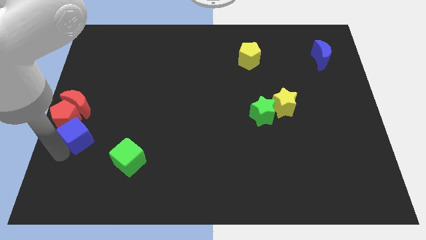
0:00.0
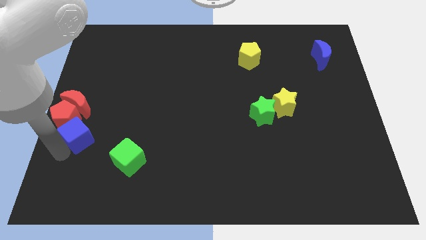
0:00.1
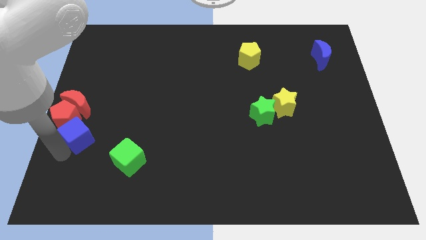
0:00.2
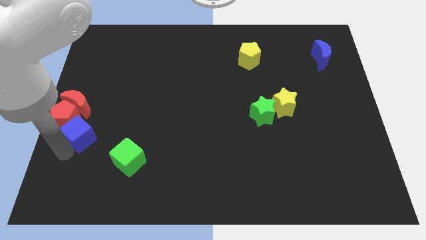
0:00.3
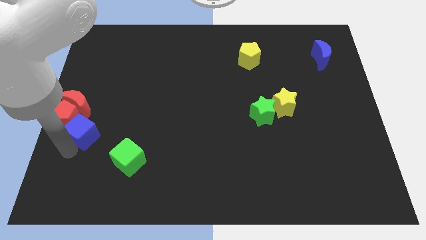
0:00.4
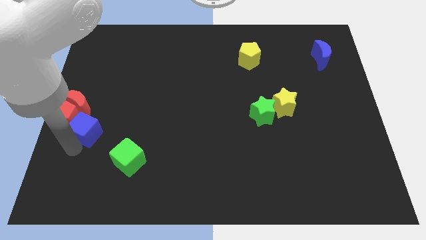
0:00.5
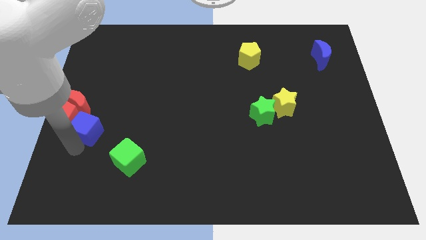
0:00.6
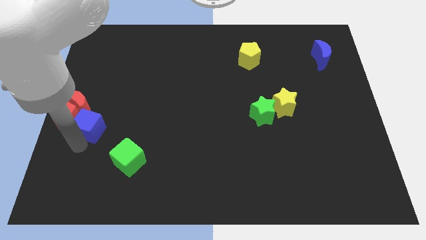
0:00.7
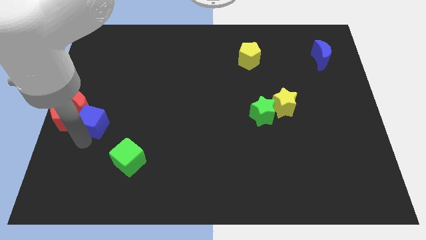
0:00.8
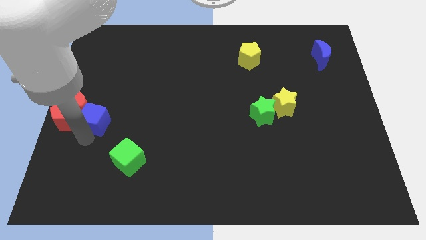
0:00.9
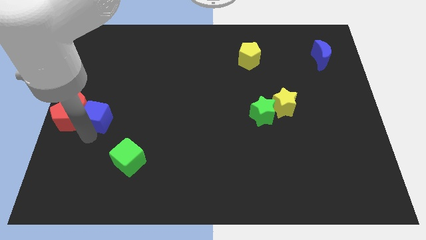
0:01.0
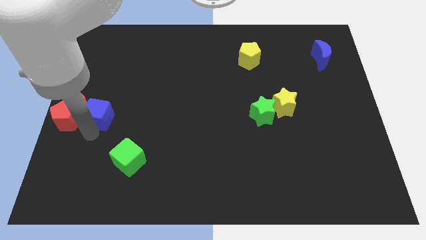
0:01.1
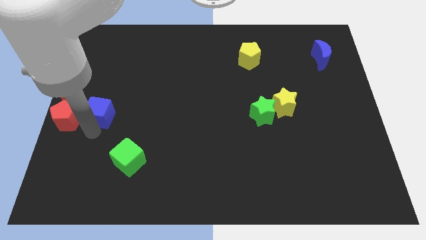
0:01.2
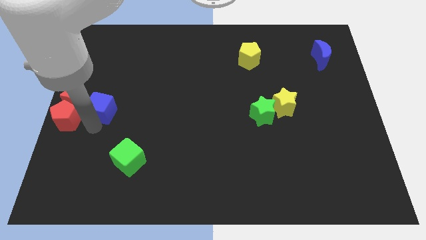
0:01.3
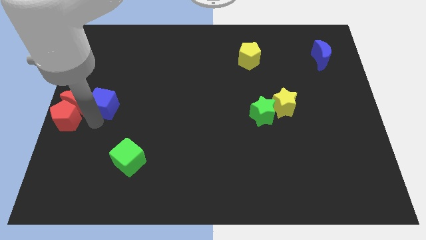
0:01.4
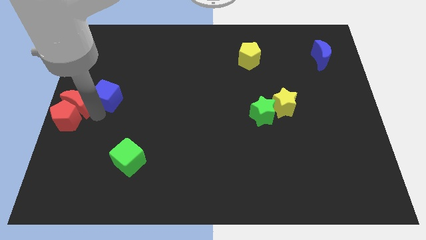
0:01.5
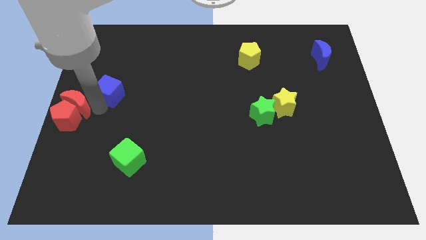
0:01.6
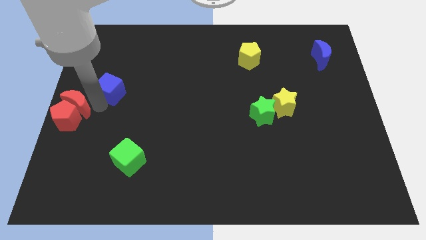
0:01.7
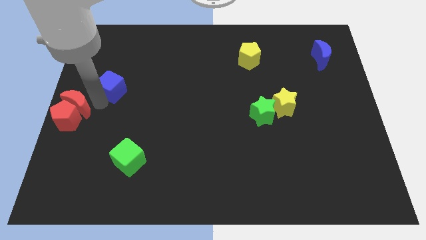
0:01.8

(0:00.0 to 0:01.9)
place the blue cube diagonally right to the red moon

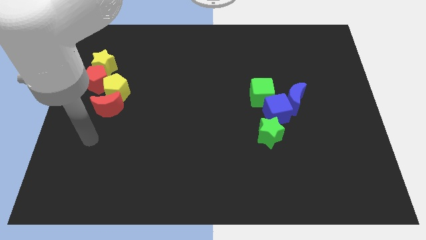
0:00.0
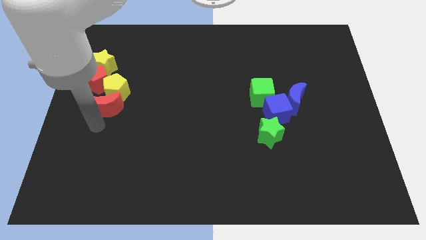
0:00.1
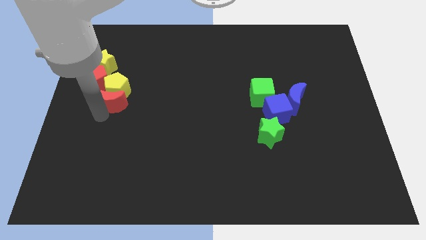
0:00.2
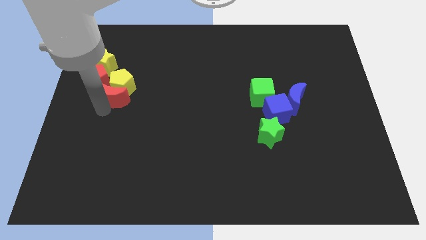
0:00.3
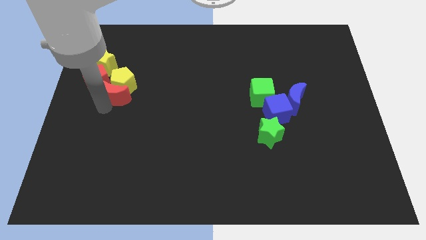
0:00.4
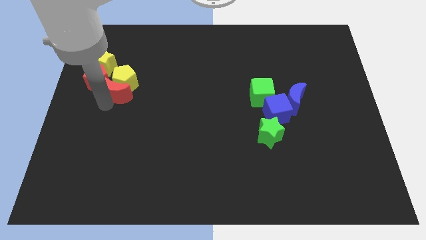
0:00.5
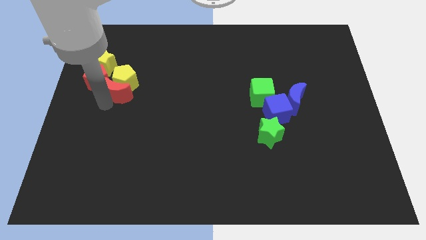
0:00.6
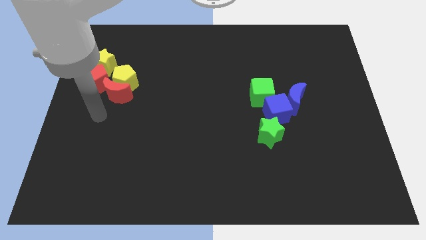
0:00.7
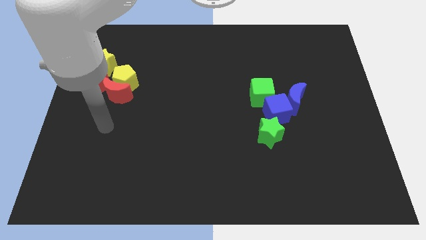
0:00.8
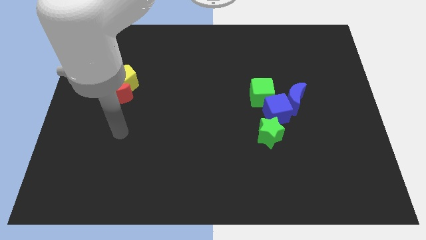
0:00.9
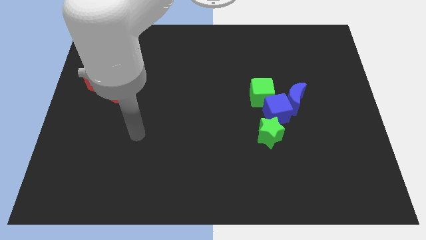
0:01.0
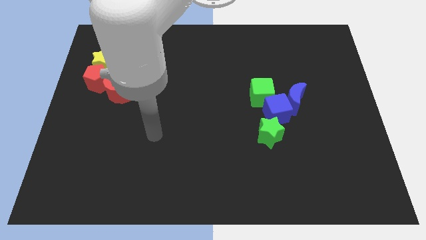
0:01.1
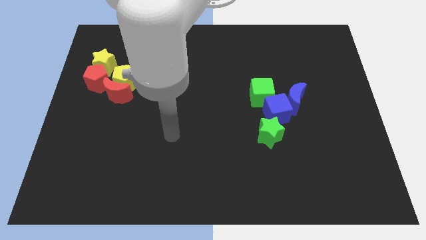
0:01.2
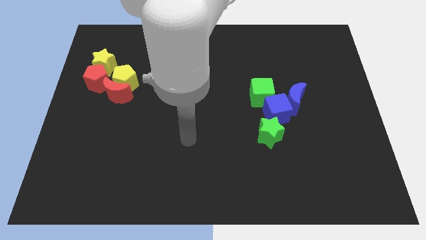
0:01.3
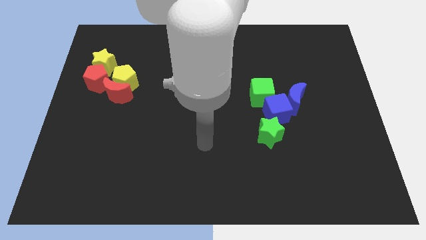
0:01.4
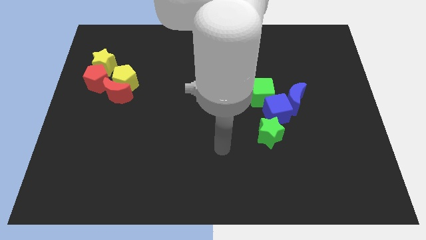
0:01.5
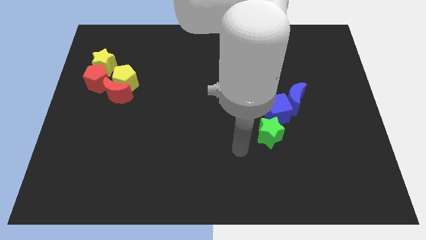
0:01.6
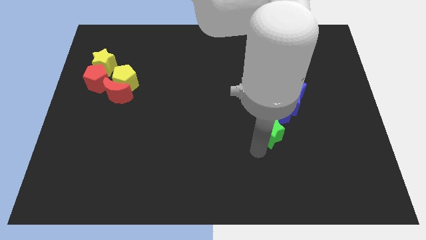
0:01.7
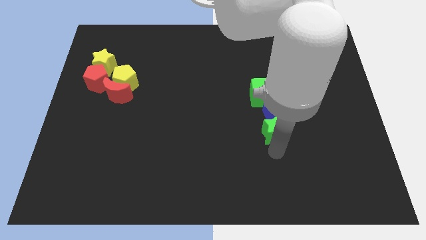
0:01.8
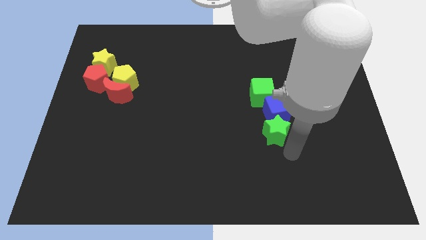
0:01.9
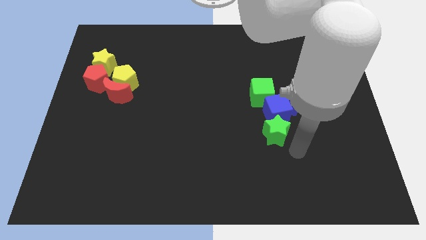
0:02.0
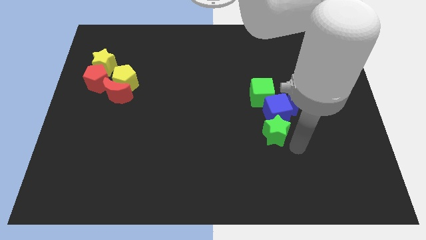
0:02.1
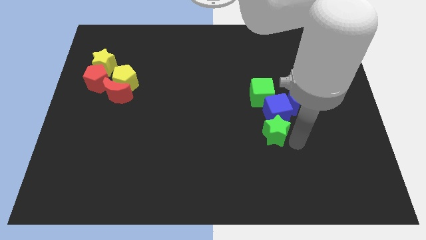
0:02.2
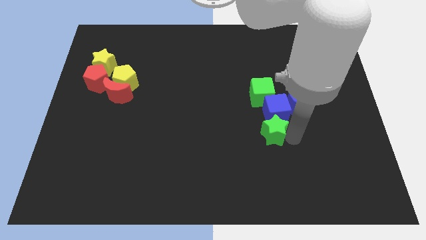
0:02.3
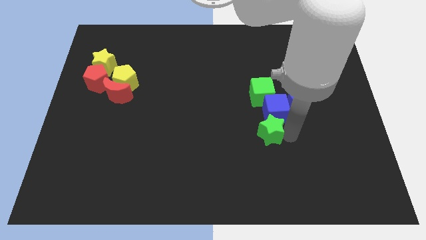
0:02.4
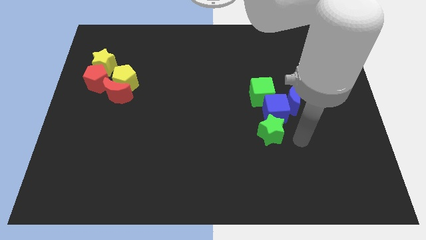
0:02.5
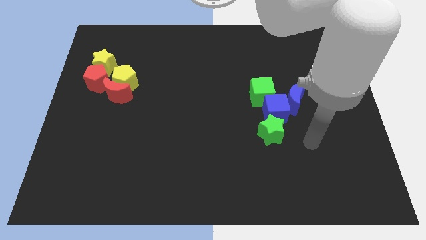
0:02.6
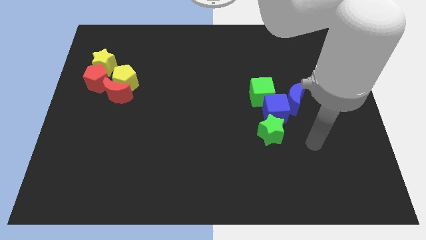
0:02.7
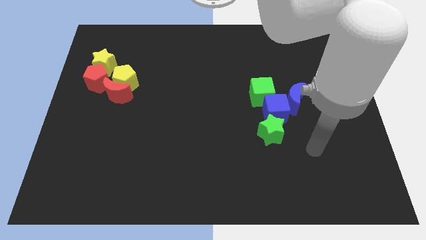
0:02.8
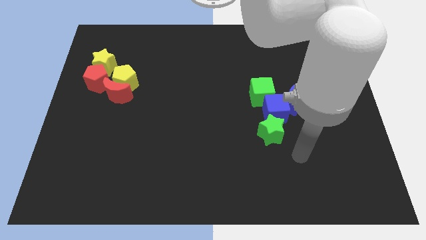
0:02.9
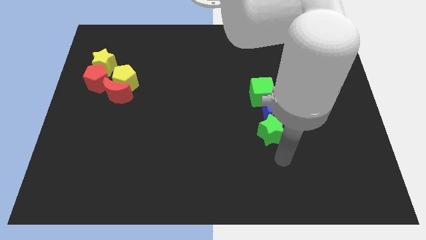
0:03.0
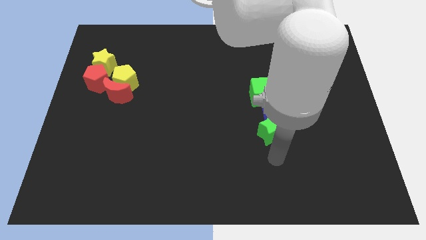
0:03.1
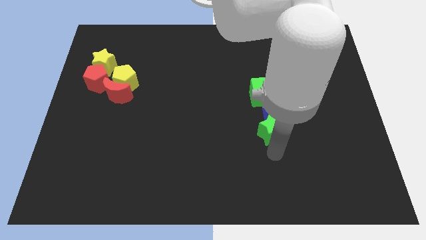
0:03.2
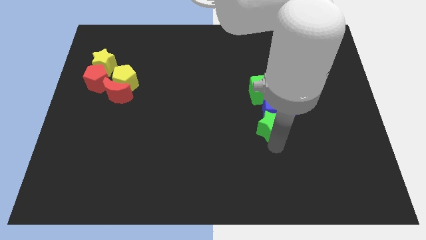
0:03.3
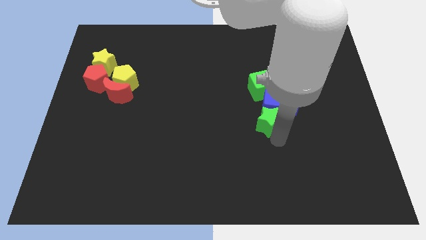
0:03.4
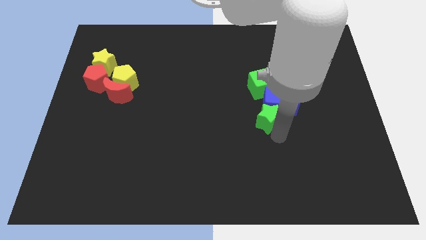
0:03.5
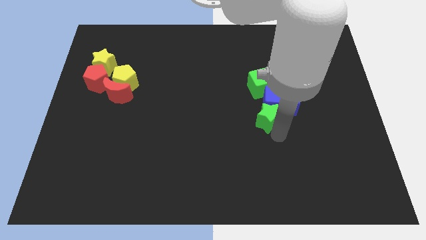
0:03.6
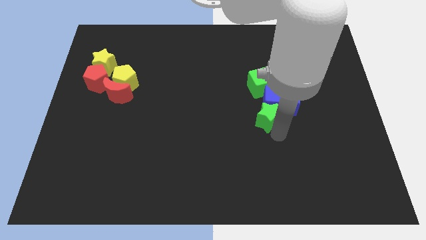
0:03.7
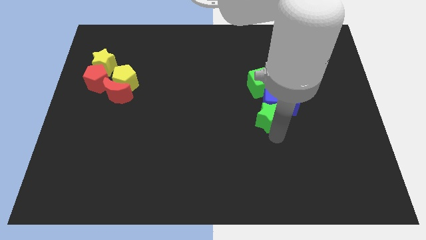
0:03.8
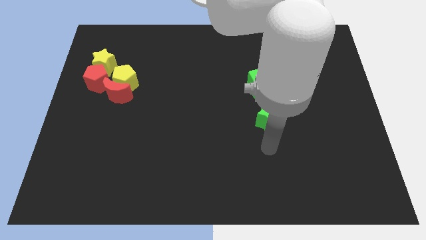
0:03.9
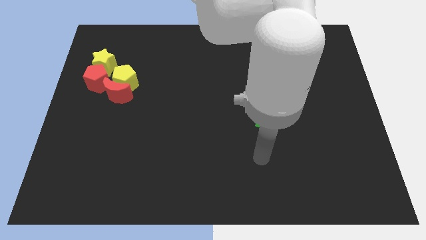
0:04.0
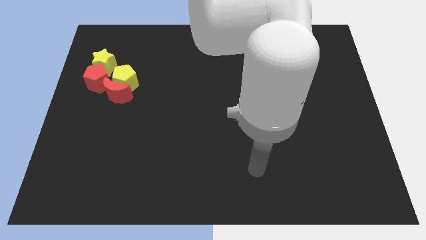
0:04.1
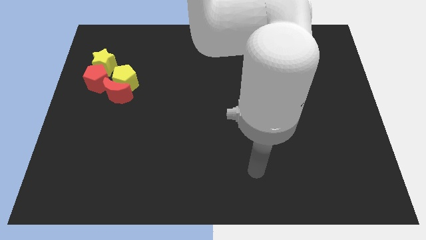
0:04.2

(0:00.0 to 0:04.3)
push both the group of blocks yellow red and green blue slightly to the top side of the board

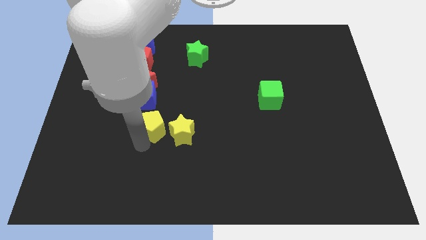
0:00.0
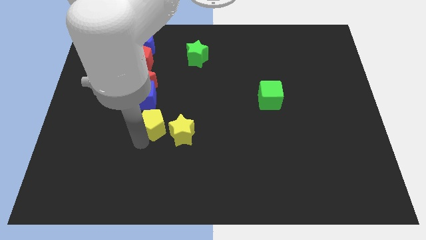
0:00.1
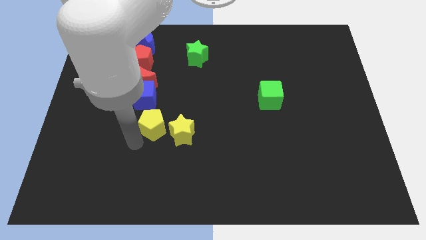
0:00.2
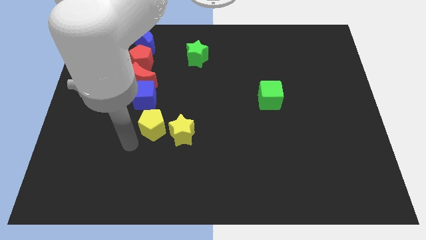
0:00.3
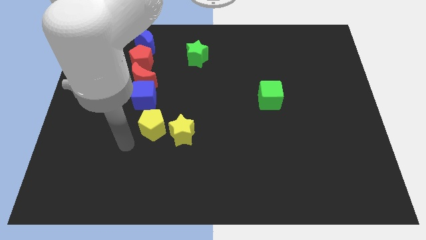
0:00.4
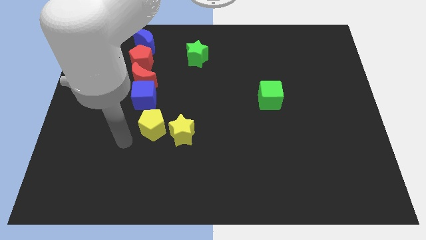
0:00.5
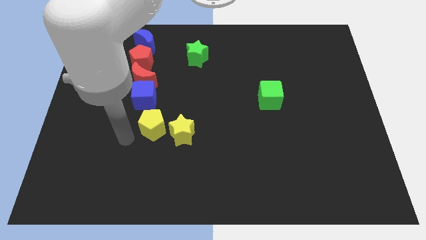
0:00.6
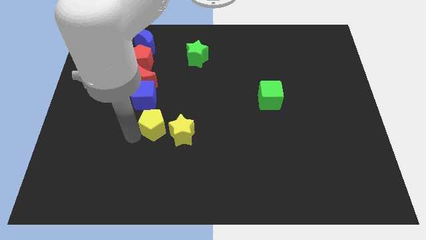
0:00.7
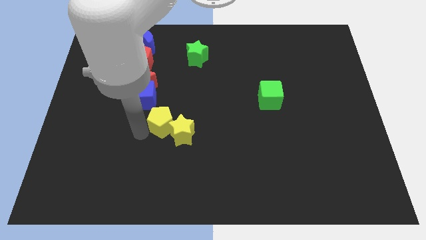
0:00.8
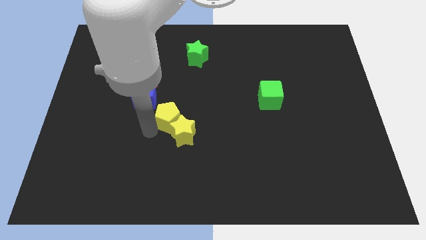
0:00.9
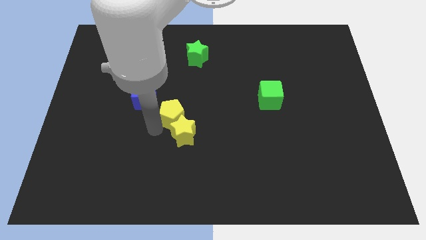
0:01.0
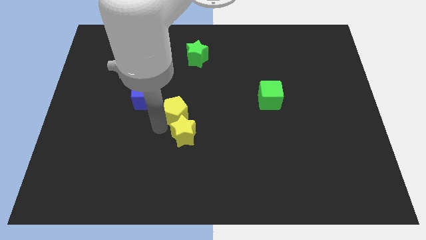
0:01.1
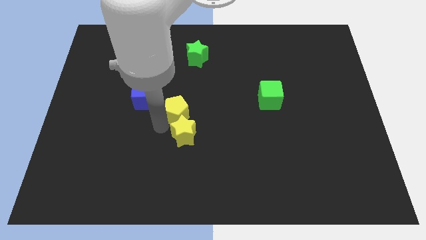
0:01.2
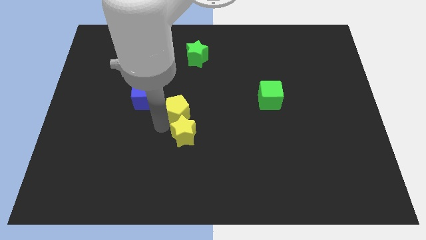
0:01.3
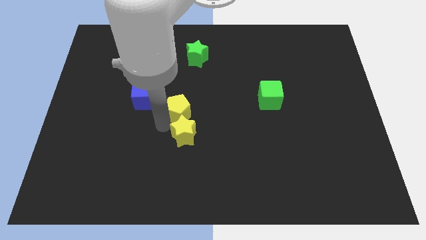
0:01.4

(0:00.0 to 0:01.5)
push the yellow pentagon into the yellow star

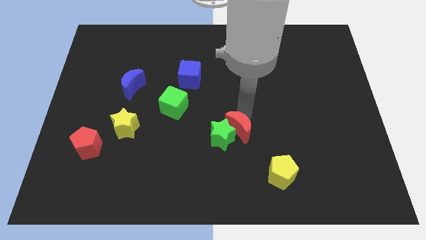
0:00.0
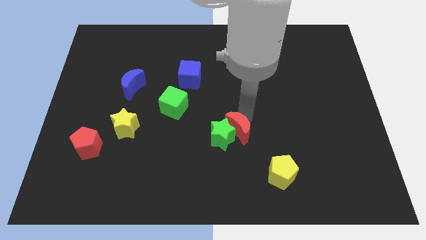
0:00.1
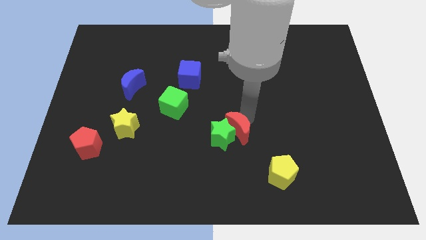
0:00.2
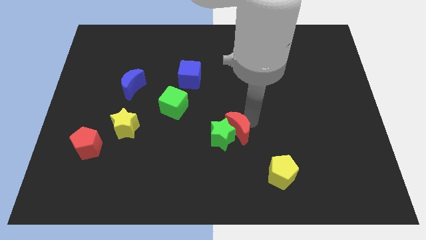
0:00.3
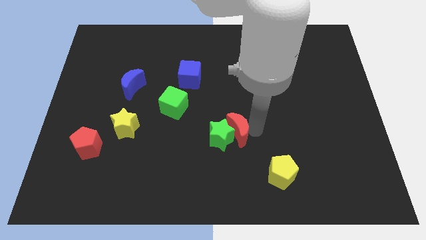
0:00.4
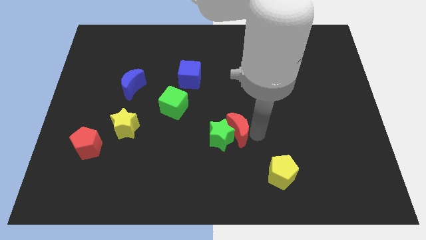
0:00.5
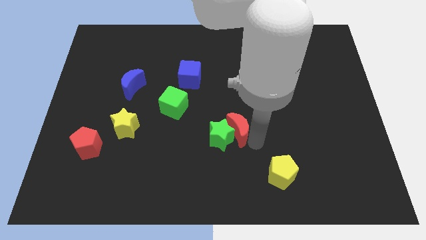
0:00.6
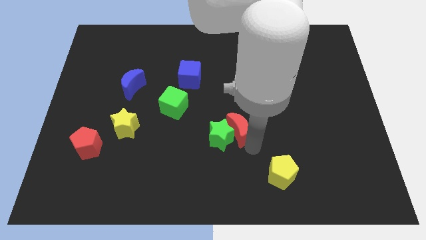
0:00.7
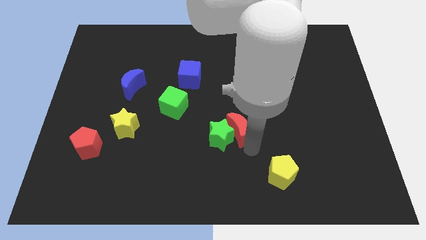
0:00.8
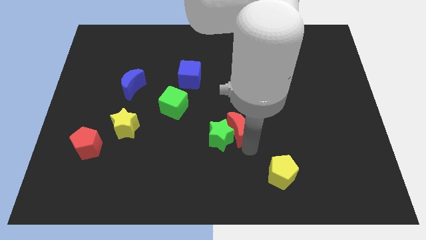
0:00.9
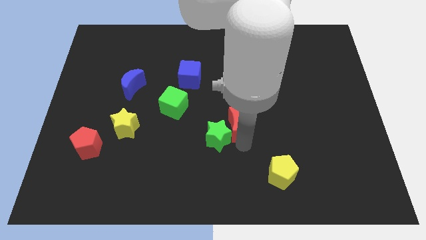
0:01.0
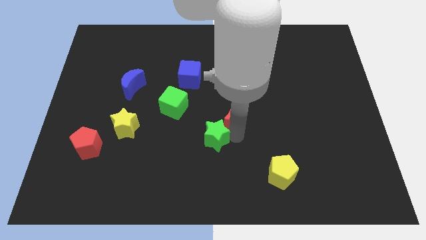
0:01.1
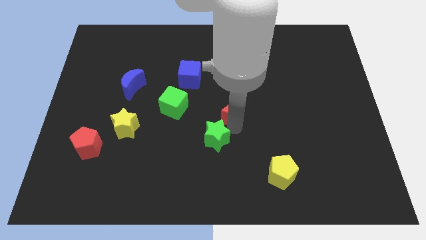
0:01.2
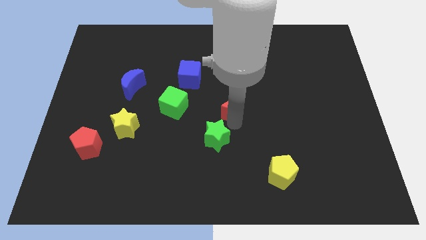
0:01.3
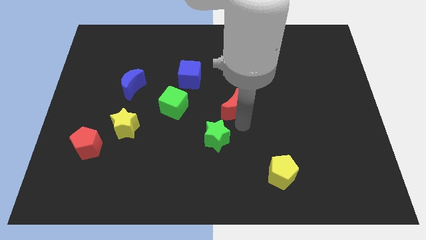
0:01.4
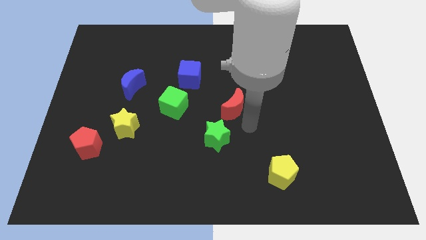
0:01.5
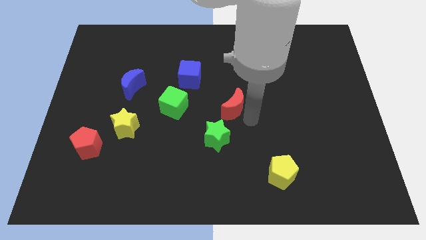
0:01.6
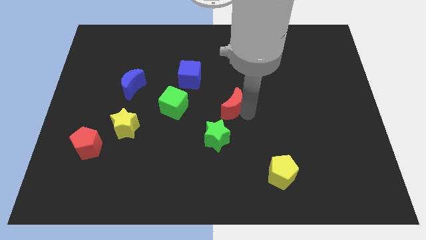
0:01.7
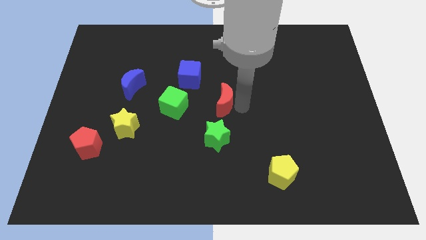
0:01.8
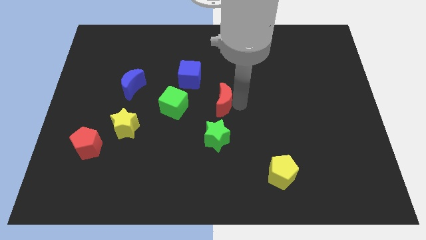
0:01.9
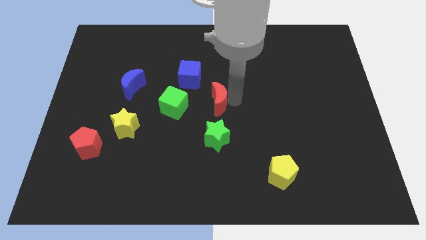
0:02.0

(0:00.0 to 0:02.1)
separate red crescent from green star
